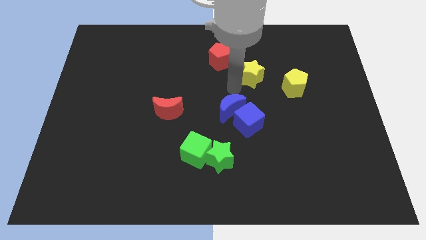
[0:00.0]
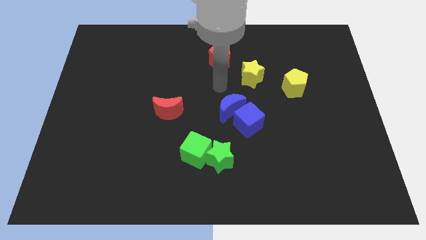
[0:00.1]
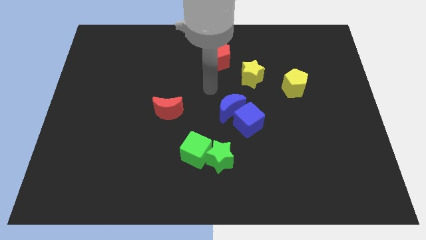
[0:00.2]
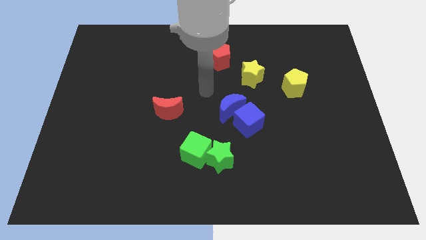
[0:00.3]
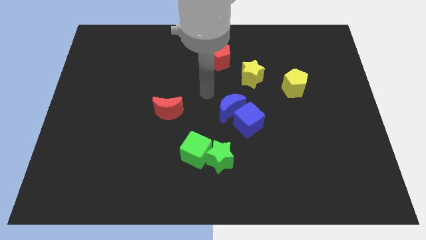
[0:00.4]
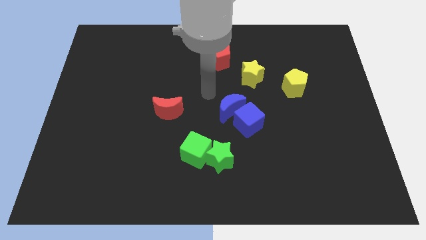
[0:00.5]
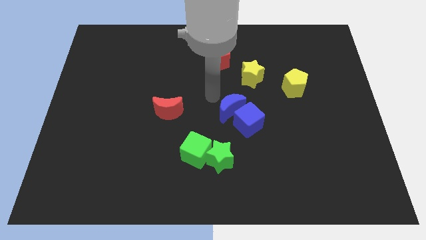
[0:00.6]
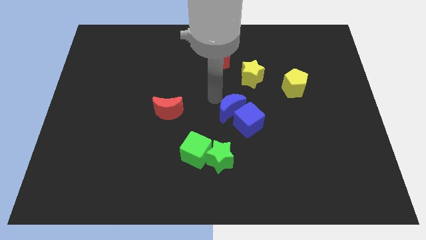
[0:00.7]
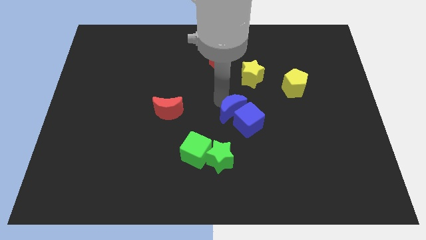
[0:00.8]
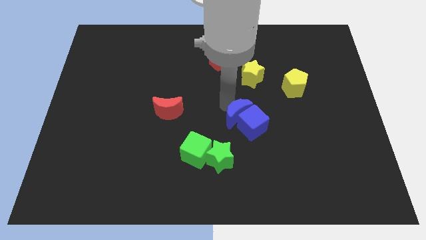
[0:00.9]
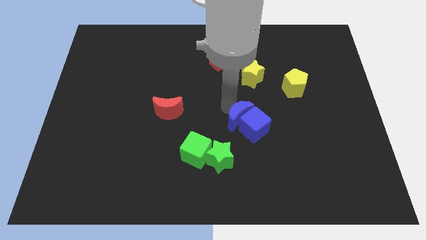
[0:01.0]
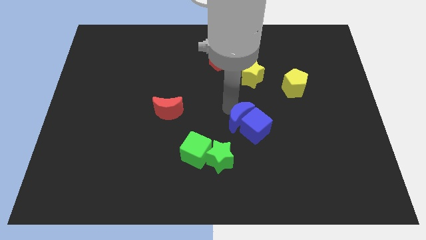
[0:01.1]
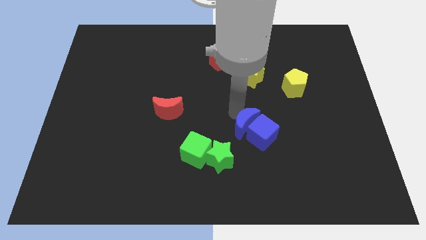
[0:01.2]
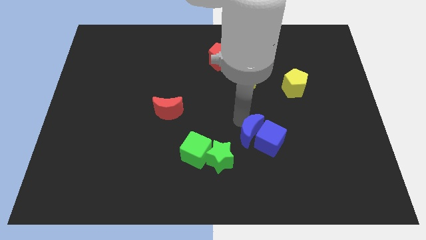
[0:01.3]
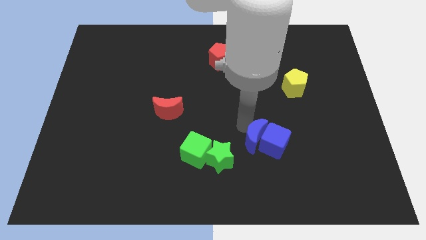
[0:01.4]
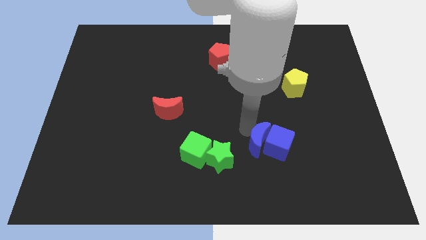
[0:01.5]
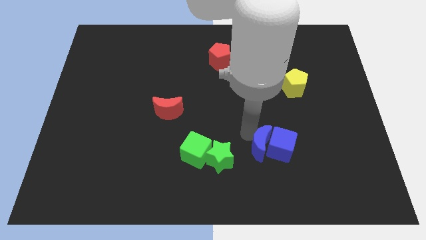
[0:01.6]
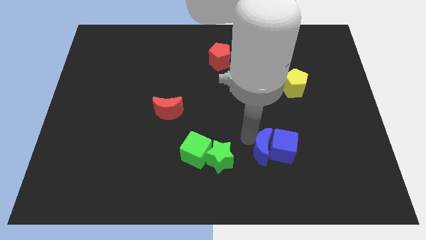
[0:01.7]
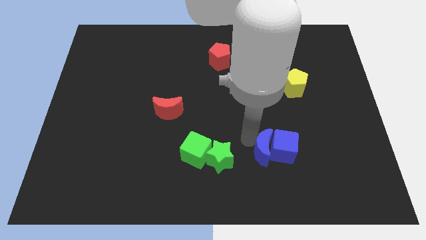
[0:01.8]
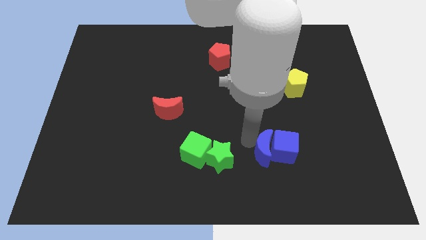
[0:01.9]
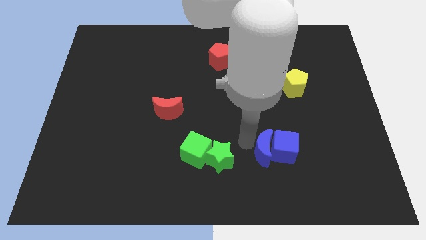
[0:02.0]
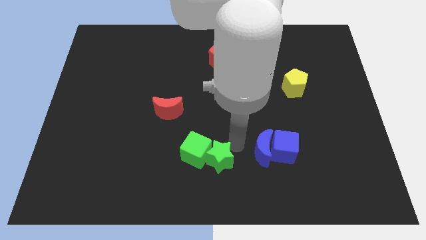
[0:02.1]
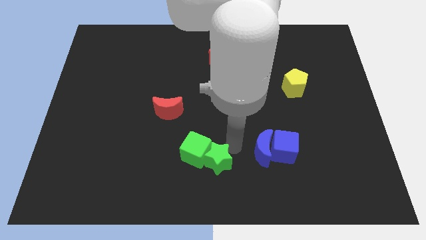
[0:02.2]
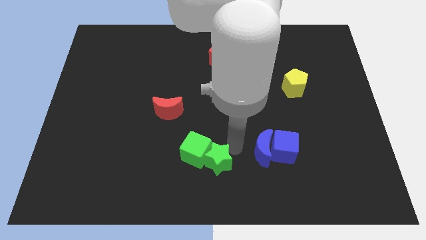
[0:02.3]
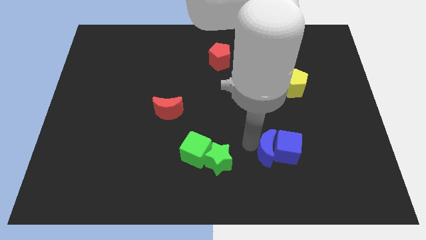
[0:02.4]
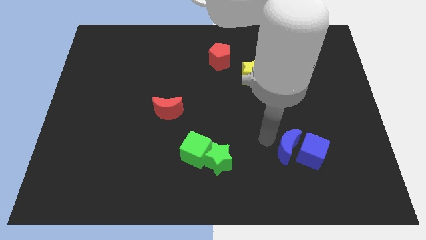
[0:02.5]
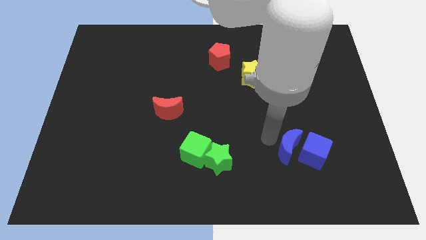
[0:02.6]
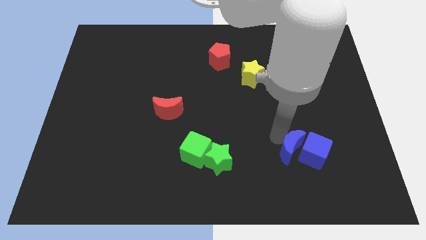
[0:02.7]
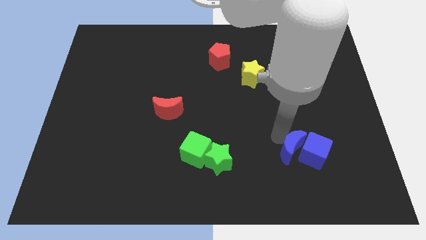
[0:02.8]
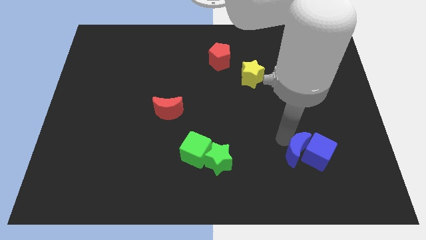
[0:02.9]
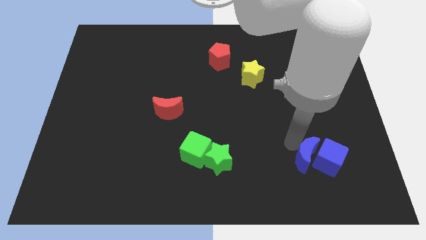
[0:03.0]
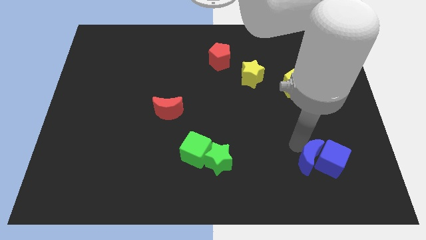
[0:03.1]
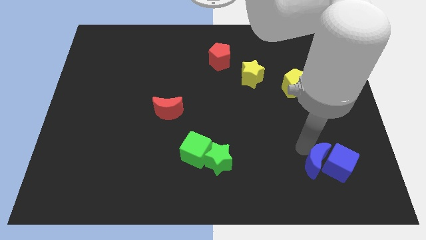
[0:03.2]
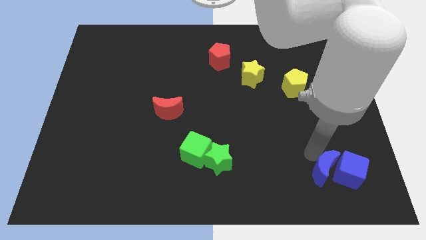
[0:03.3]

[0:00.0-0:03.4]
push blue moon into the blue cube

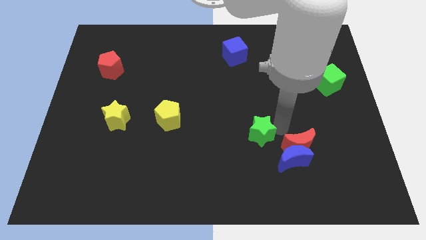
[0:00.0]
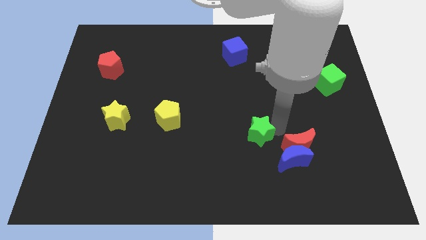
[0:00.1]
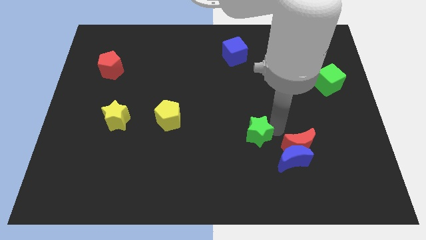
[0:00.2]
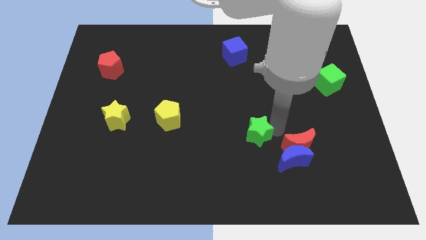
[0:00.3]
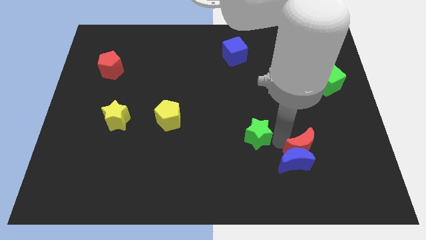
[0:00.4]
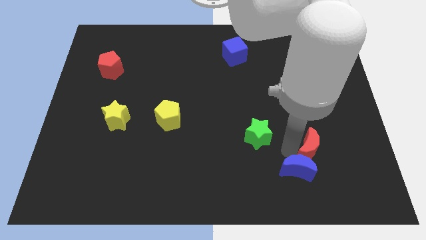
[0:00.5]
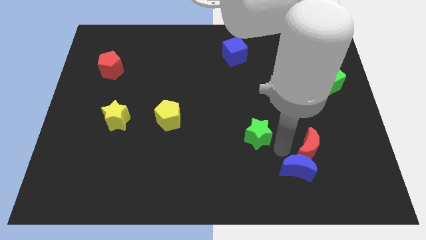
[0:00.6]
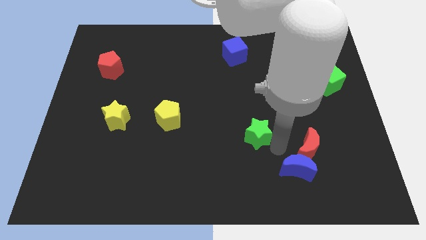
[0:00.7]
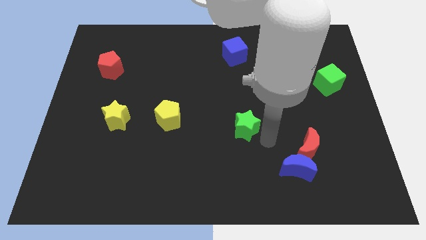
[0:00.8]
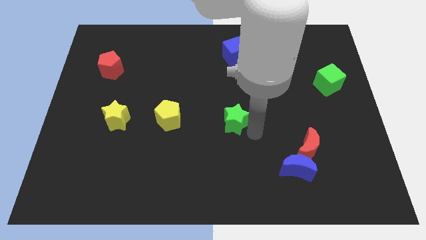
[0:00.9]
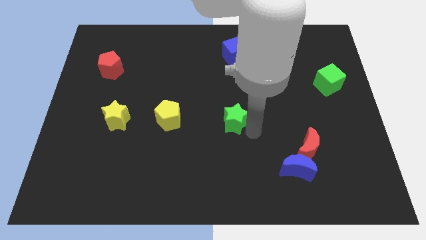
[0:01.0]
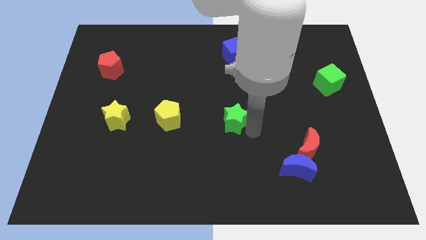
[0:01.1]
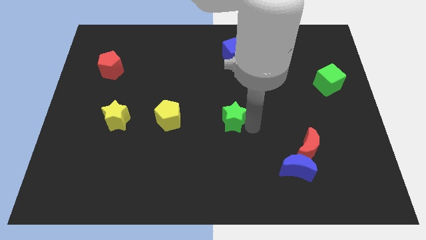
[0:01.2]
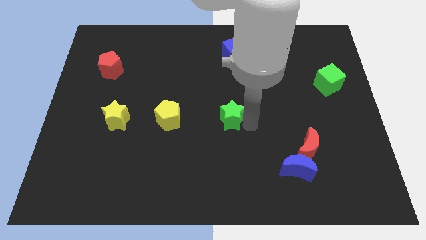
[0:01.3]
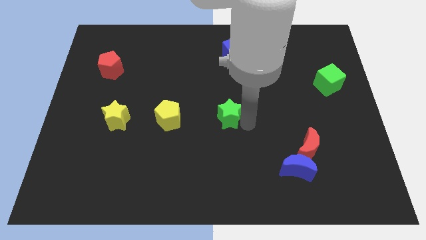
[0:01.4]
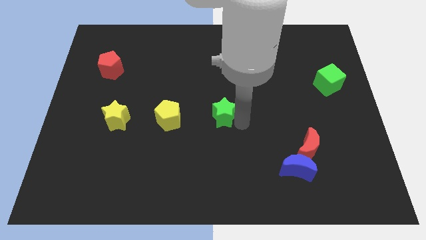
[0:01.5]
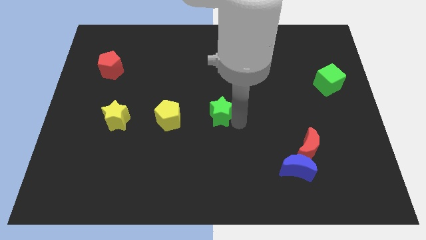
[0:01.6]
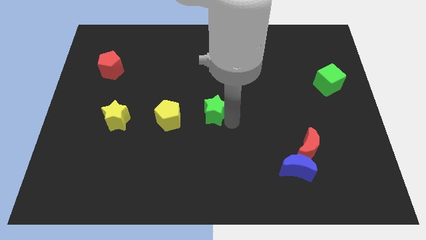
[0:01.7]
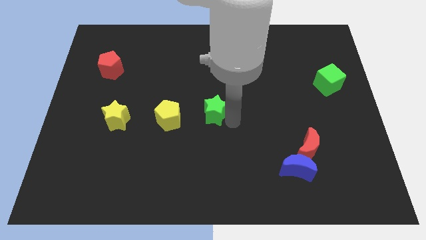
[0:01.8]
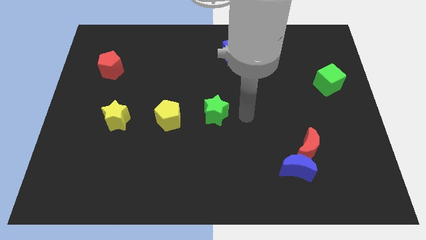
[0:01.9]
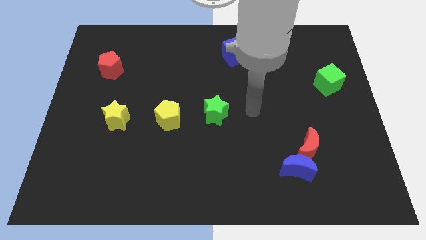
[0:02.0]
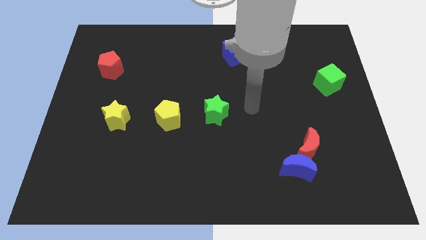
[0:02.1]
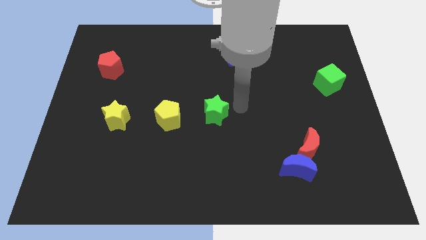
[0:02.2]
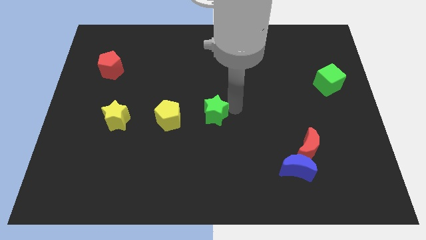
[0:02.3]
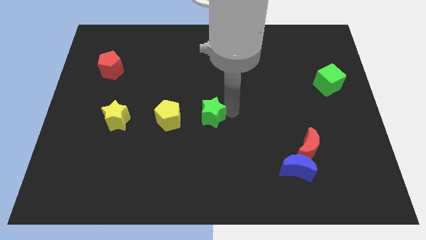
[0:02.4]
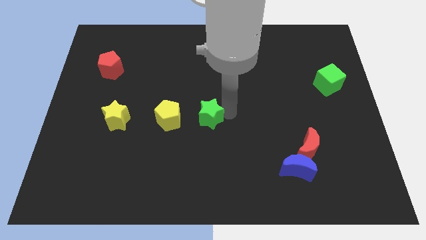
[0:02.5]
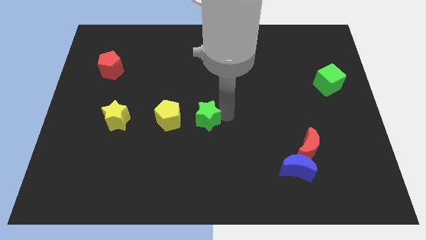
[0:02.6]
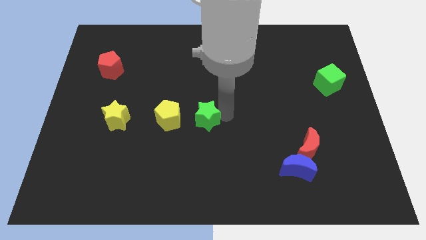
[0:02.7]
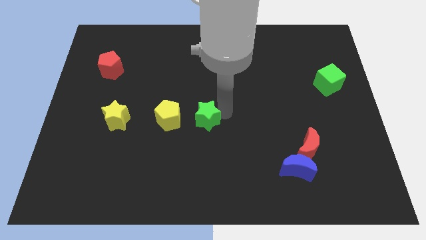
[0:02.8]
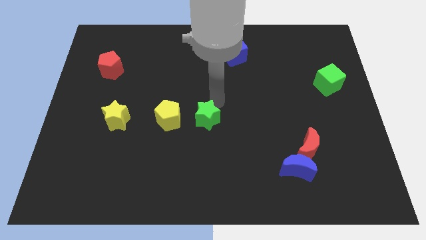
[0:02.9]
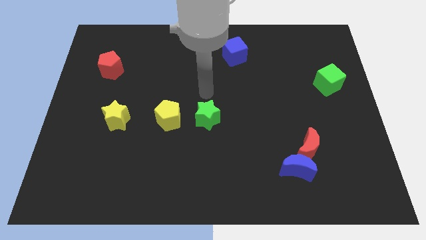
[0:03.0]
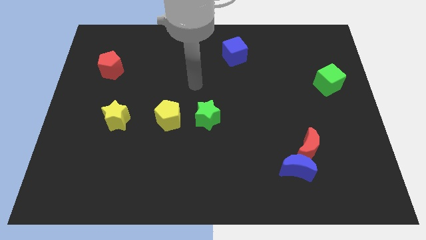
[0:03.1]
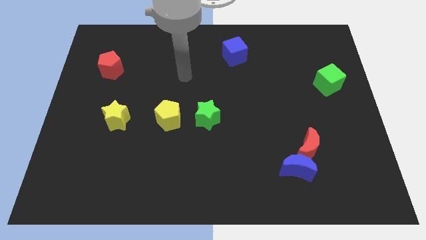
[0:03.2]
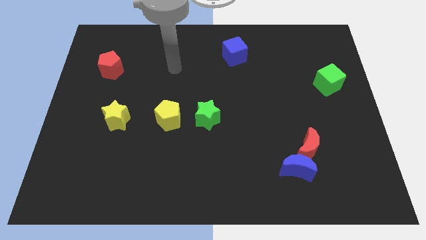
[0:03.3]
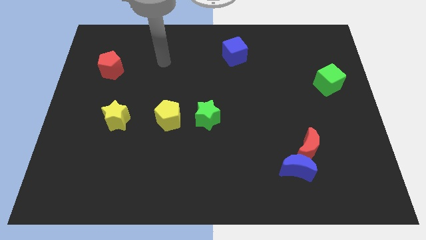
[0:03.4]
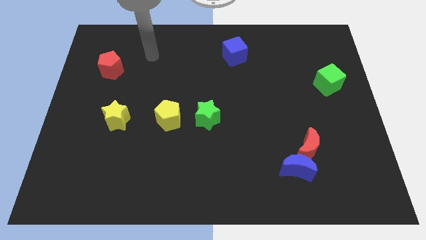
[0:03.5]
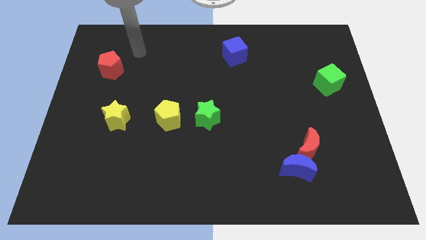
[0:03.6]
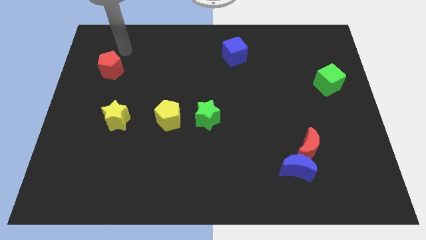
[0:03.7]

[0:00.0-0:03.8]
move green star at center

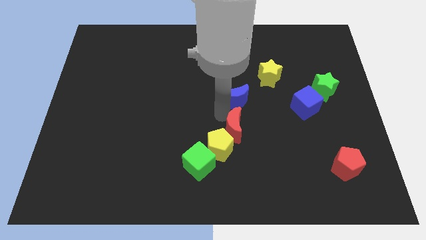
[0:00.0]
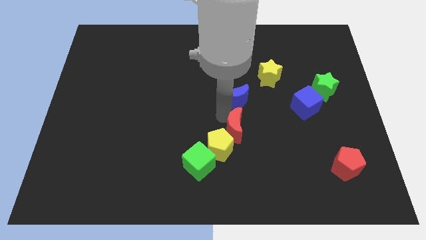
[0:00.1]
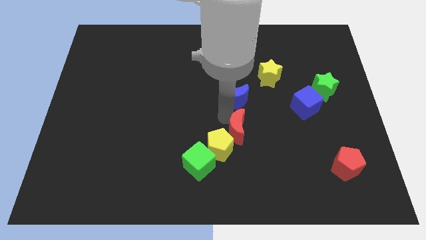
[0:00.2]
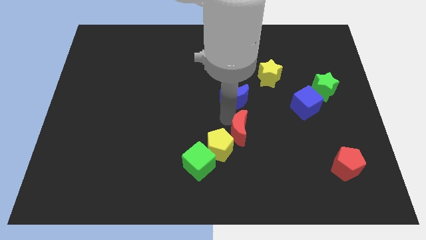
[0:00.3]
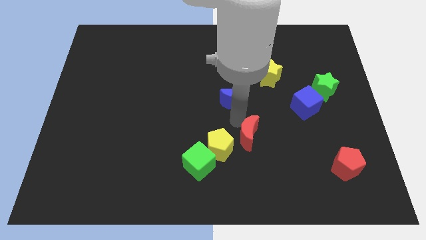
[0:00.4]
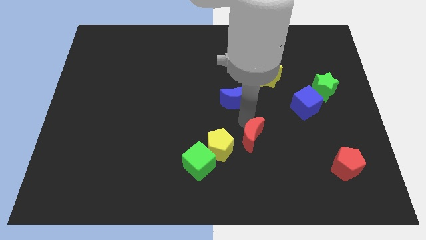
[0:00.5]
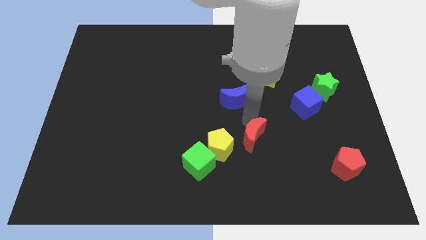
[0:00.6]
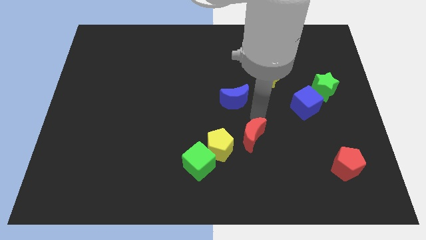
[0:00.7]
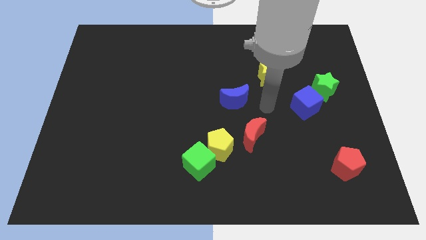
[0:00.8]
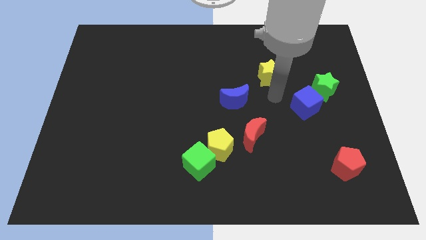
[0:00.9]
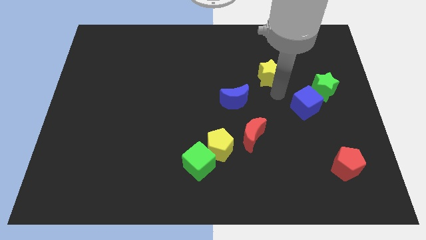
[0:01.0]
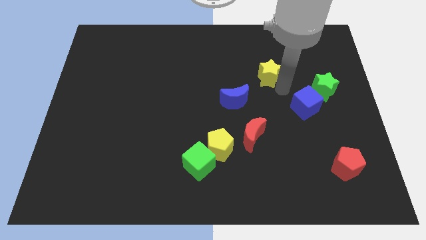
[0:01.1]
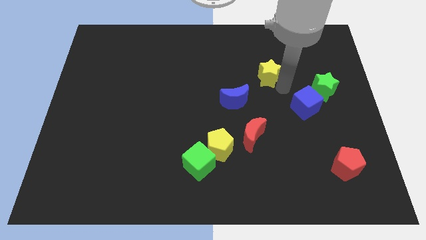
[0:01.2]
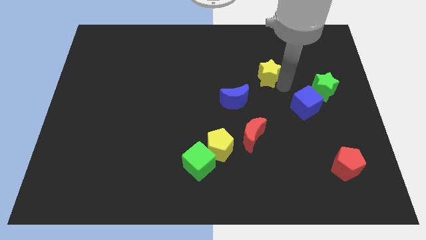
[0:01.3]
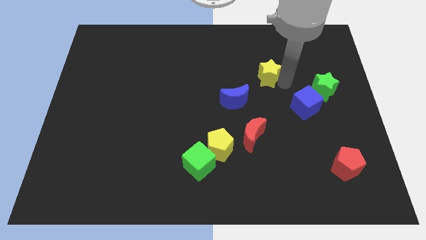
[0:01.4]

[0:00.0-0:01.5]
slide the red moon diagonal top right to yellow pentagon

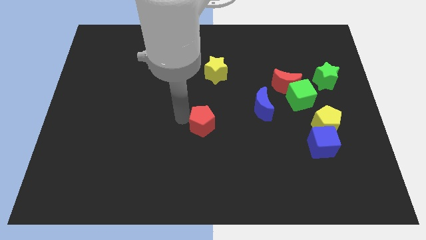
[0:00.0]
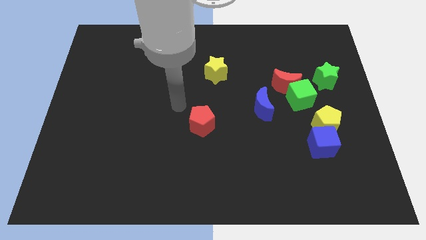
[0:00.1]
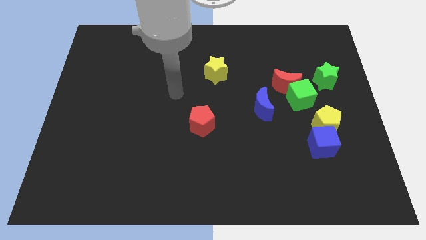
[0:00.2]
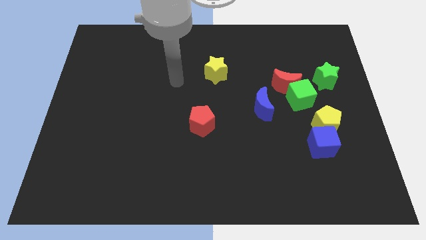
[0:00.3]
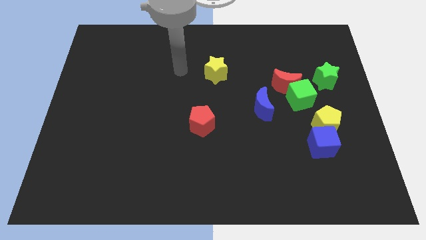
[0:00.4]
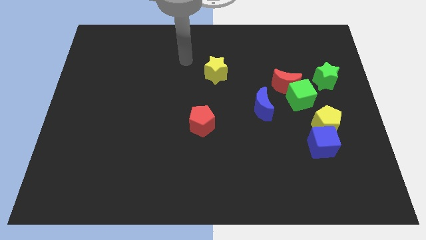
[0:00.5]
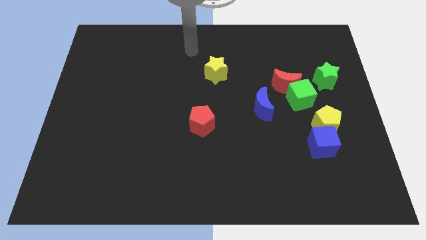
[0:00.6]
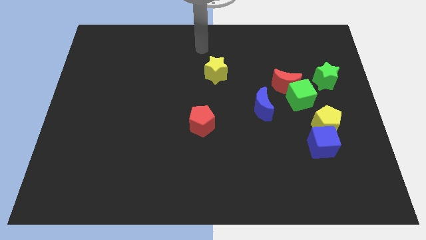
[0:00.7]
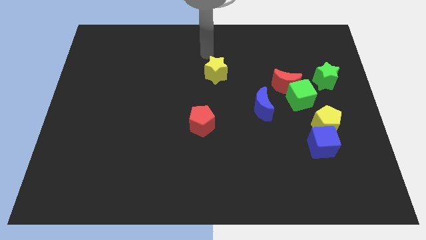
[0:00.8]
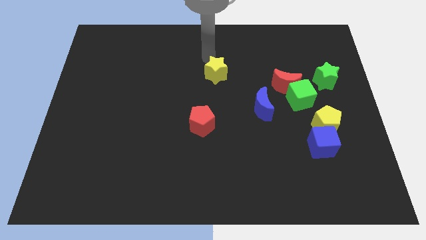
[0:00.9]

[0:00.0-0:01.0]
move your arm away from the red pentagon
